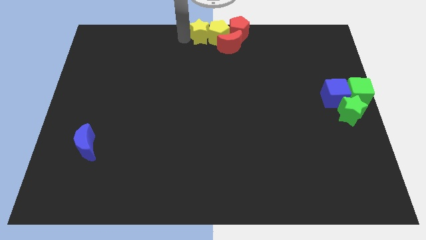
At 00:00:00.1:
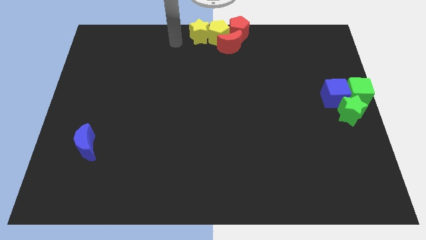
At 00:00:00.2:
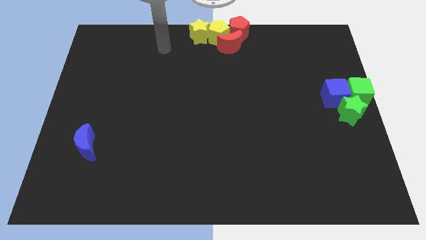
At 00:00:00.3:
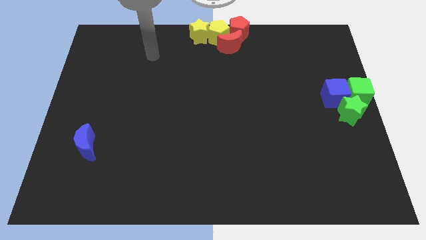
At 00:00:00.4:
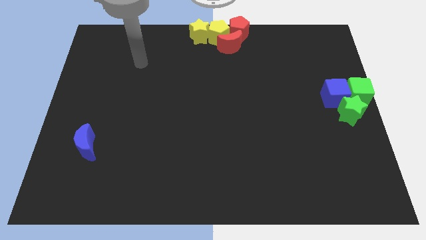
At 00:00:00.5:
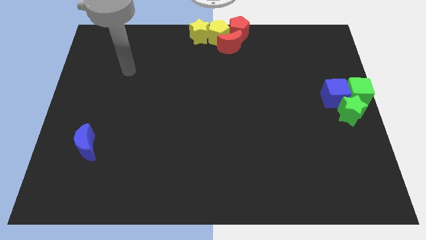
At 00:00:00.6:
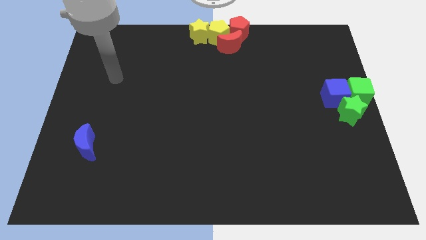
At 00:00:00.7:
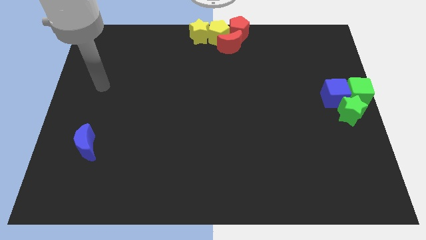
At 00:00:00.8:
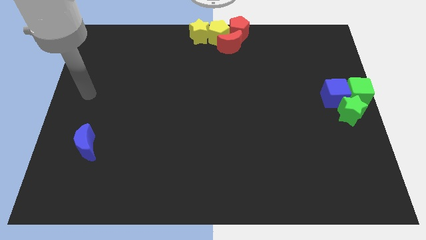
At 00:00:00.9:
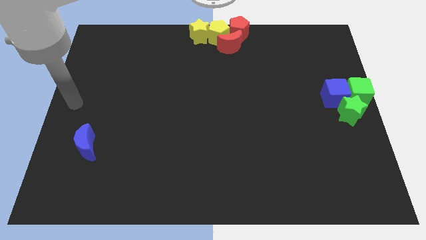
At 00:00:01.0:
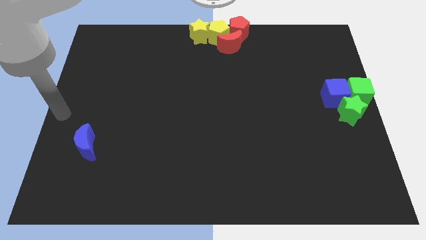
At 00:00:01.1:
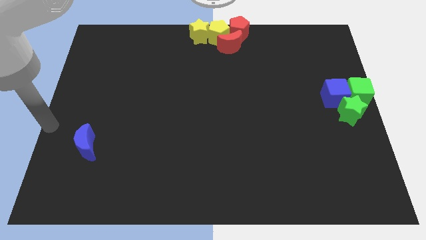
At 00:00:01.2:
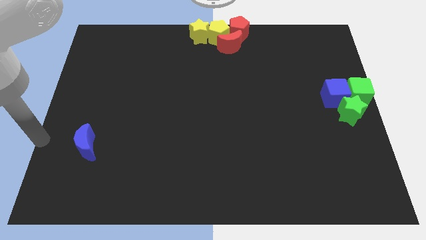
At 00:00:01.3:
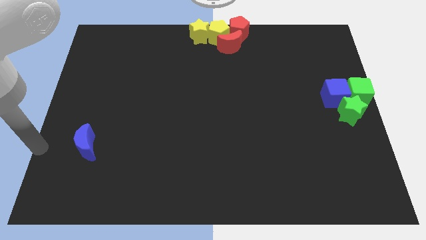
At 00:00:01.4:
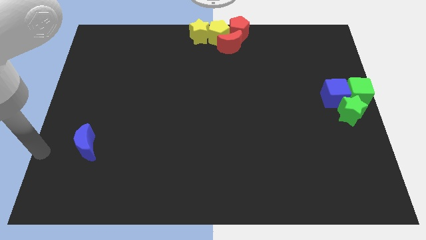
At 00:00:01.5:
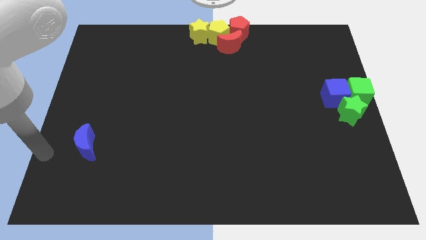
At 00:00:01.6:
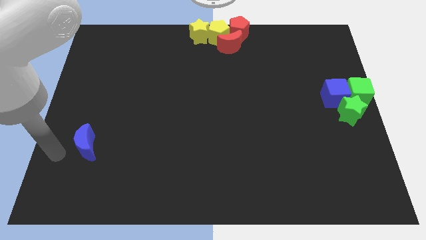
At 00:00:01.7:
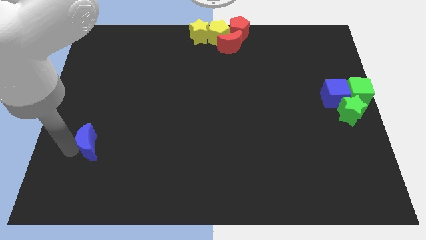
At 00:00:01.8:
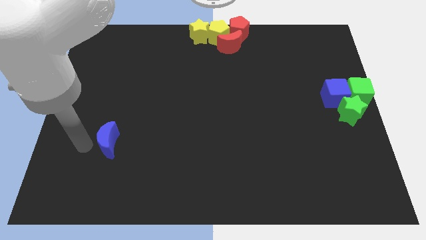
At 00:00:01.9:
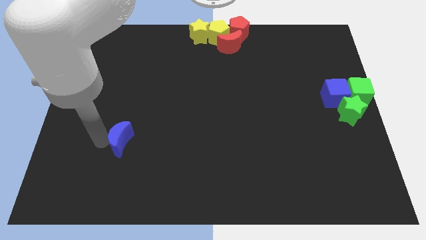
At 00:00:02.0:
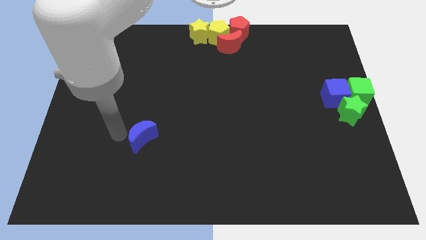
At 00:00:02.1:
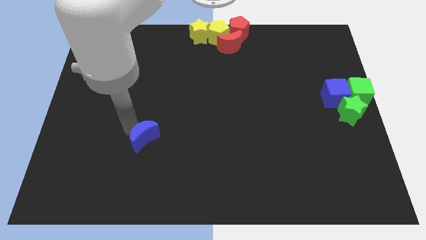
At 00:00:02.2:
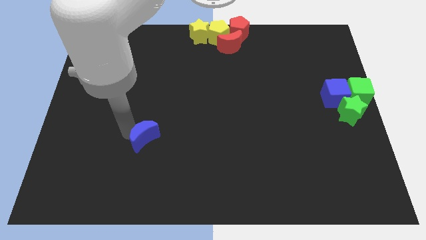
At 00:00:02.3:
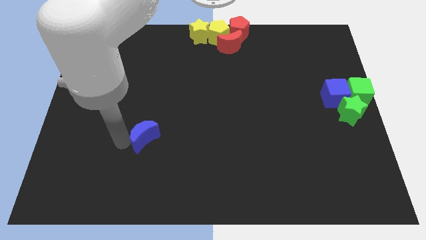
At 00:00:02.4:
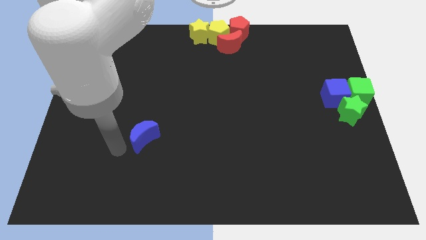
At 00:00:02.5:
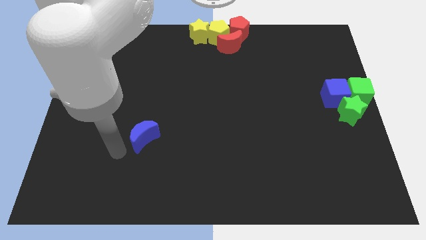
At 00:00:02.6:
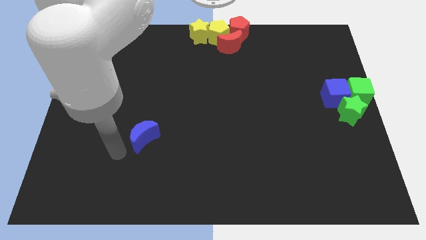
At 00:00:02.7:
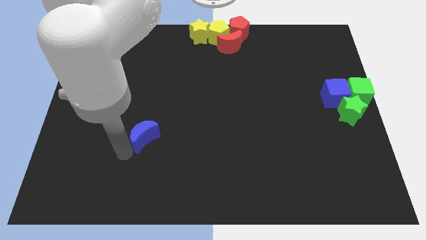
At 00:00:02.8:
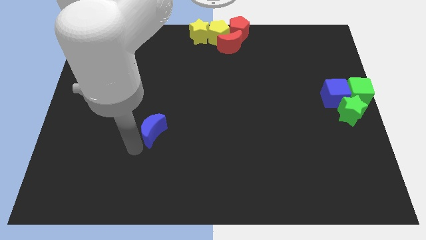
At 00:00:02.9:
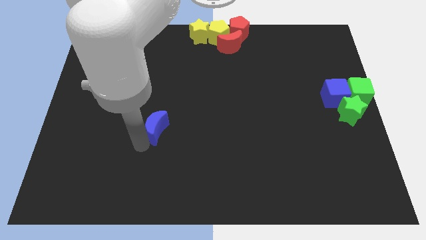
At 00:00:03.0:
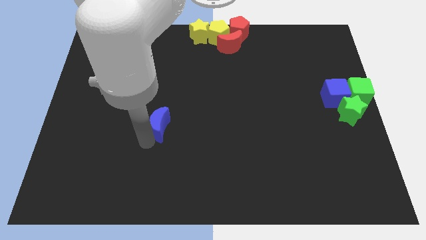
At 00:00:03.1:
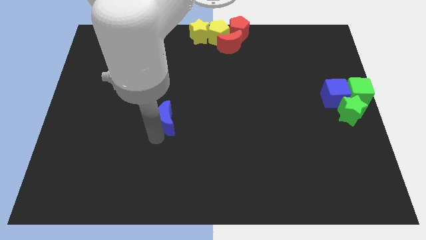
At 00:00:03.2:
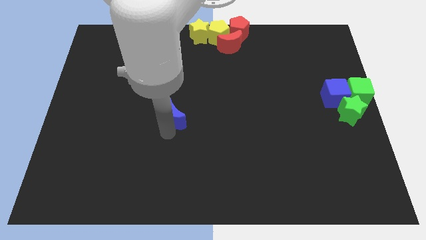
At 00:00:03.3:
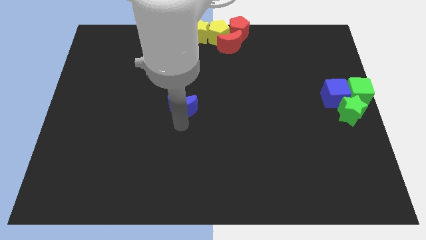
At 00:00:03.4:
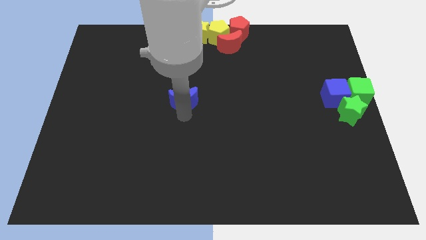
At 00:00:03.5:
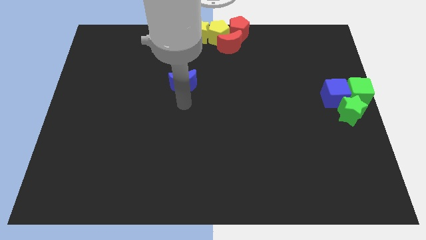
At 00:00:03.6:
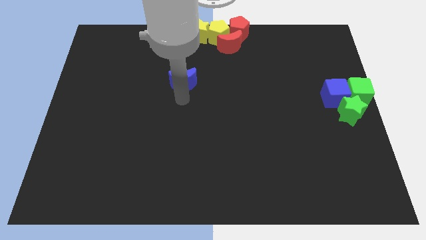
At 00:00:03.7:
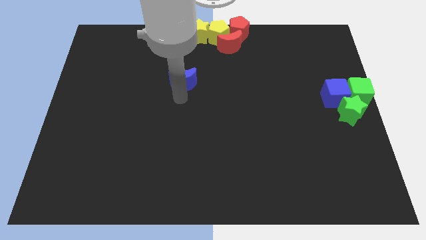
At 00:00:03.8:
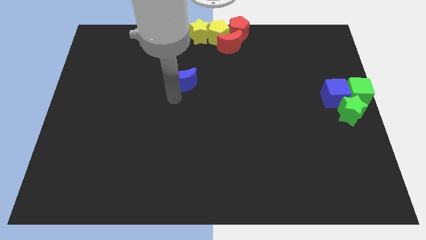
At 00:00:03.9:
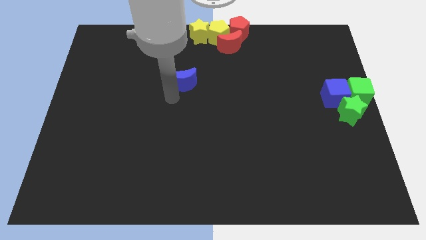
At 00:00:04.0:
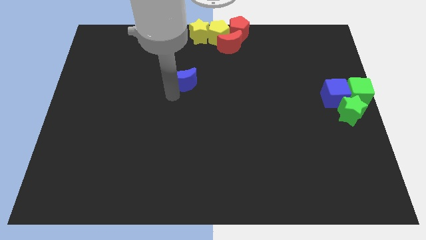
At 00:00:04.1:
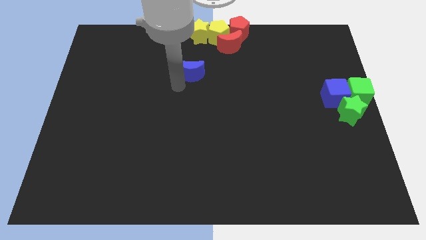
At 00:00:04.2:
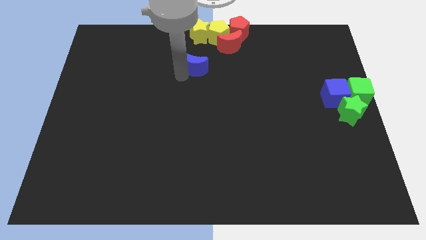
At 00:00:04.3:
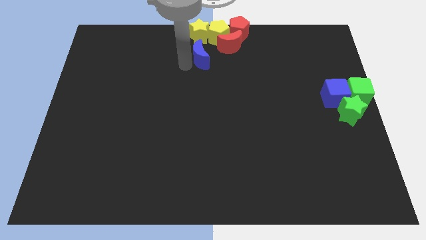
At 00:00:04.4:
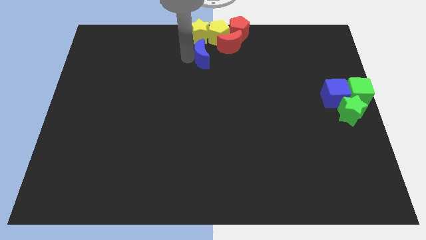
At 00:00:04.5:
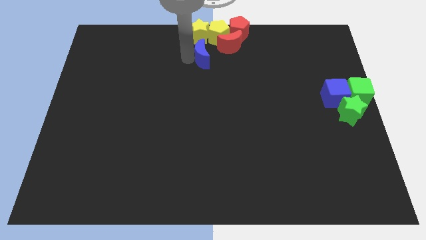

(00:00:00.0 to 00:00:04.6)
push the blue crescent to the bottom of the yellow star

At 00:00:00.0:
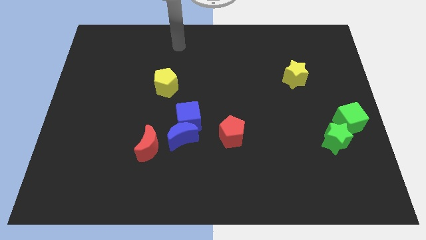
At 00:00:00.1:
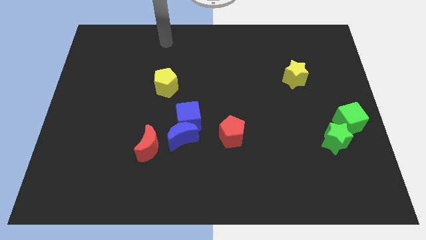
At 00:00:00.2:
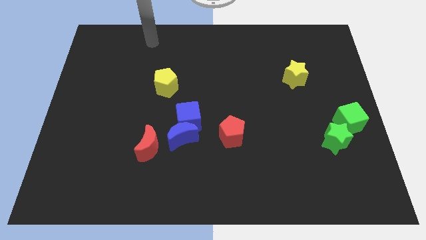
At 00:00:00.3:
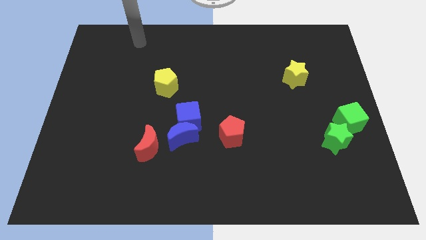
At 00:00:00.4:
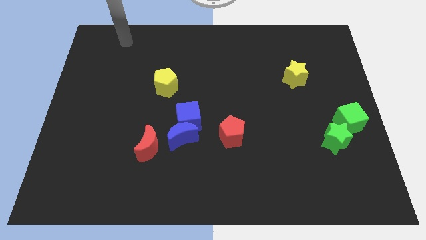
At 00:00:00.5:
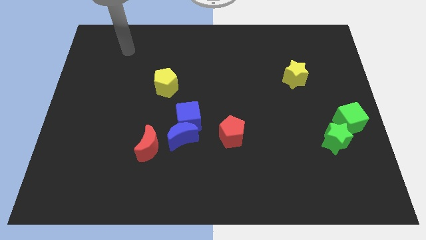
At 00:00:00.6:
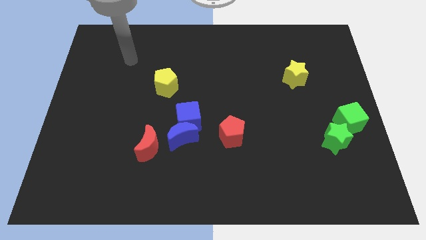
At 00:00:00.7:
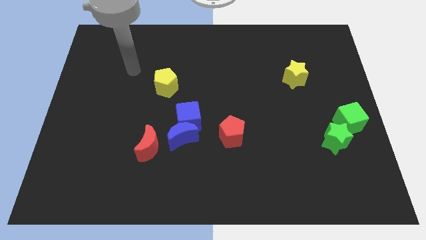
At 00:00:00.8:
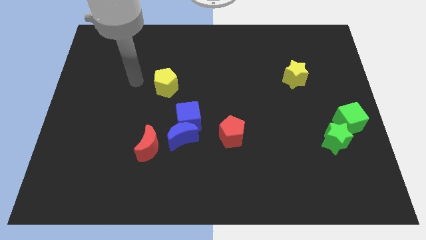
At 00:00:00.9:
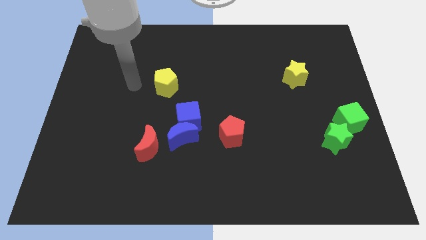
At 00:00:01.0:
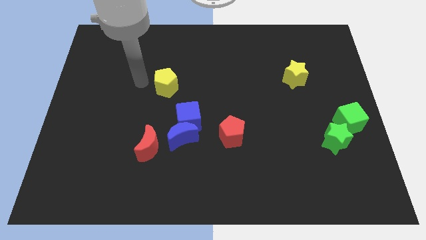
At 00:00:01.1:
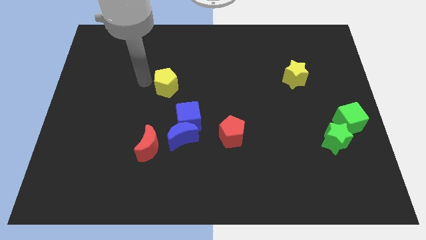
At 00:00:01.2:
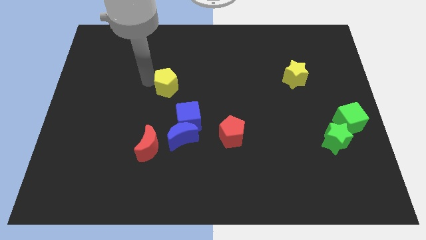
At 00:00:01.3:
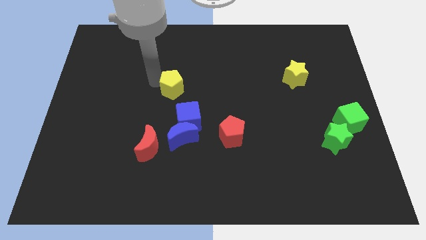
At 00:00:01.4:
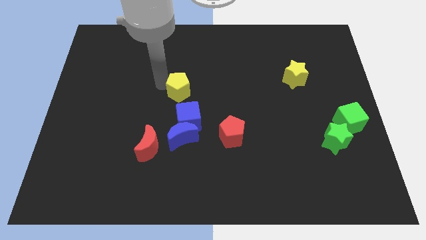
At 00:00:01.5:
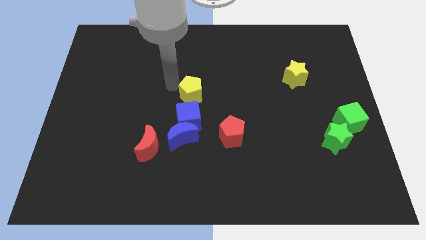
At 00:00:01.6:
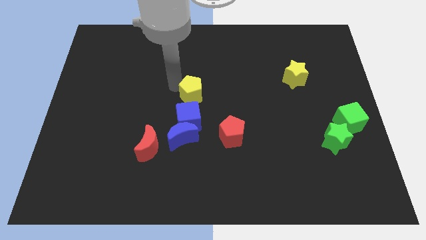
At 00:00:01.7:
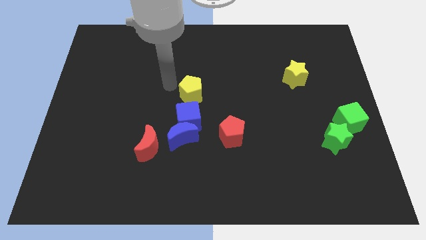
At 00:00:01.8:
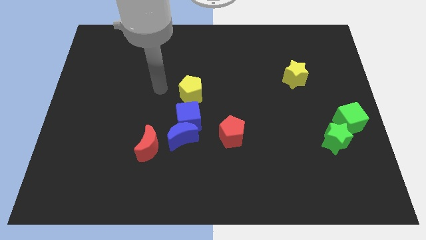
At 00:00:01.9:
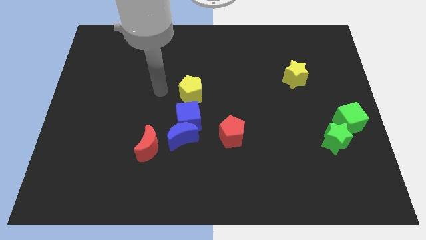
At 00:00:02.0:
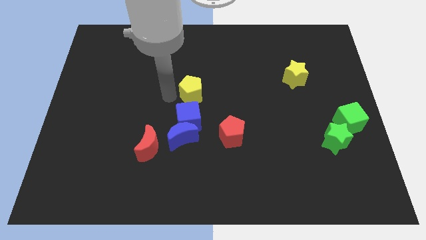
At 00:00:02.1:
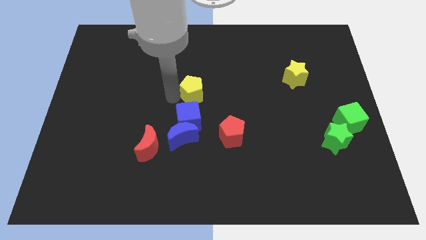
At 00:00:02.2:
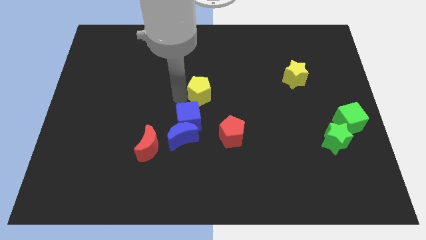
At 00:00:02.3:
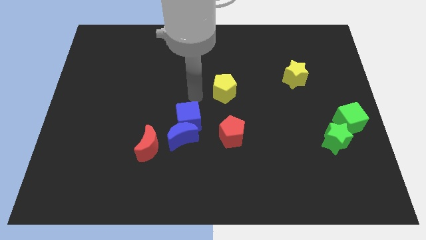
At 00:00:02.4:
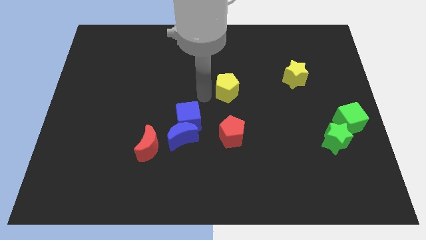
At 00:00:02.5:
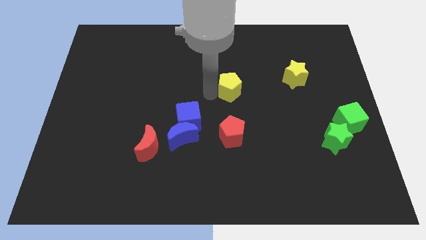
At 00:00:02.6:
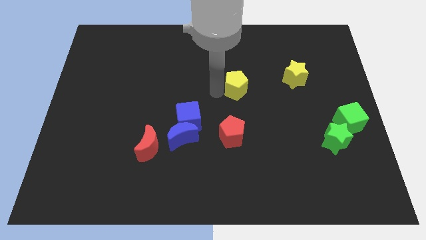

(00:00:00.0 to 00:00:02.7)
move the yellow pentagon to the top of red pentagon

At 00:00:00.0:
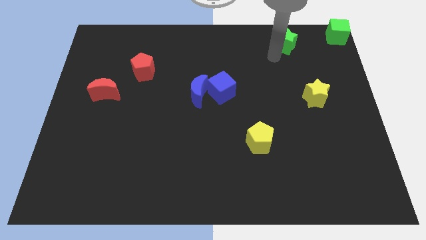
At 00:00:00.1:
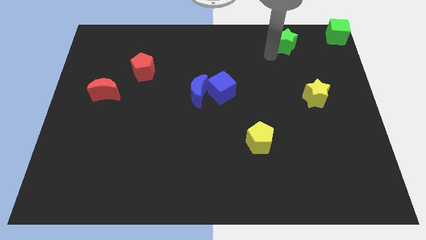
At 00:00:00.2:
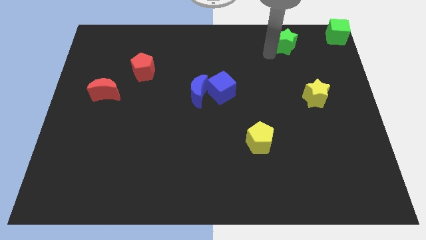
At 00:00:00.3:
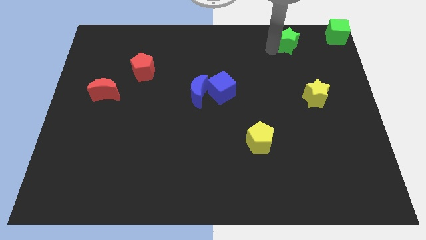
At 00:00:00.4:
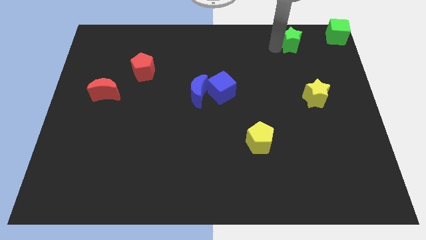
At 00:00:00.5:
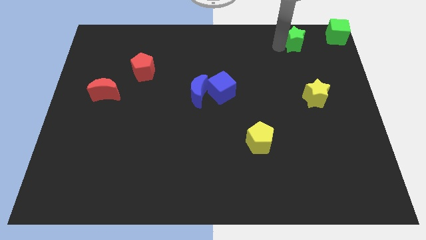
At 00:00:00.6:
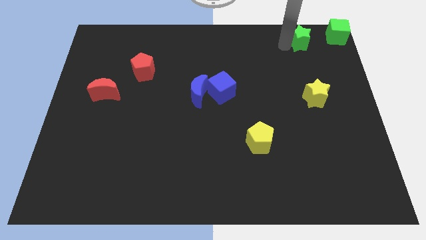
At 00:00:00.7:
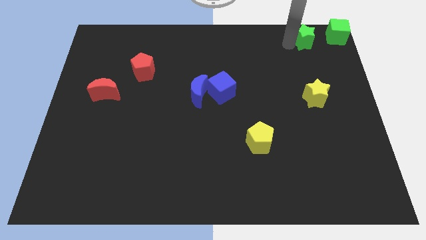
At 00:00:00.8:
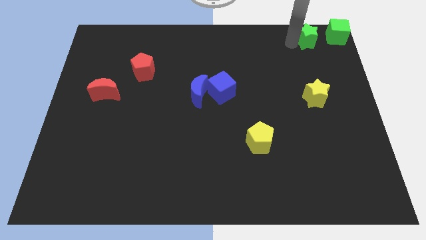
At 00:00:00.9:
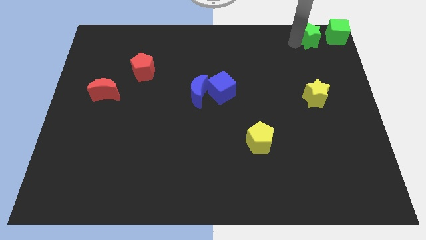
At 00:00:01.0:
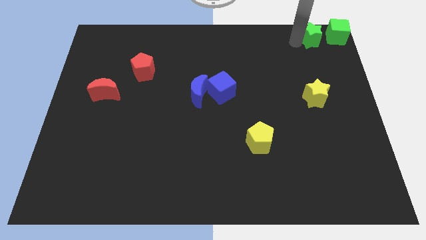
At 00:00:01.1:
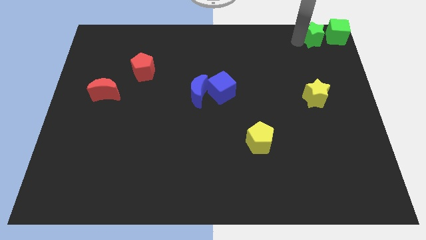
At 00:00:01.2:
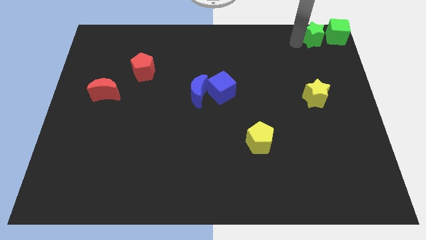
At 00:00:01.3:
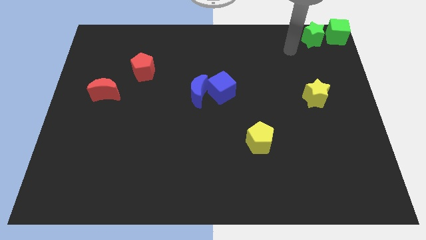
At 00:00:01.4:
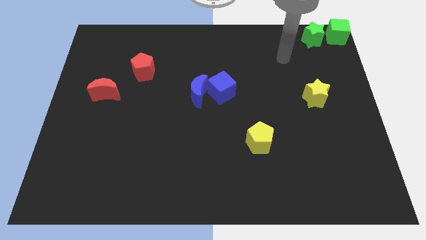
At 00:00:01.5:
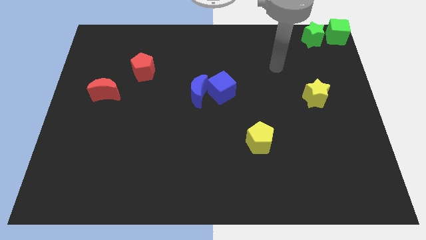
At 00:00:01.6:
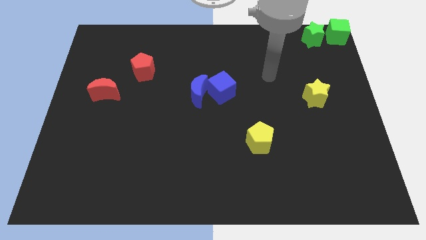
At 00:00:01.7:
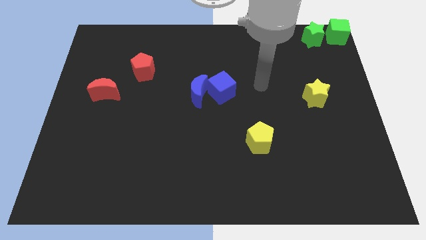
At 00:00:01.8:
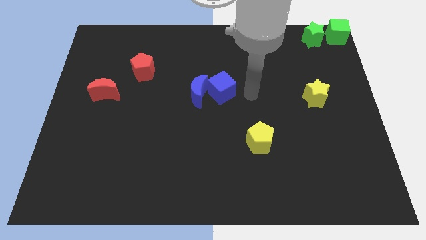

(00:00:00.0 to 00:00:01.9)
place the green star to the left of the green cube
